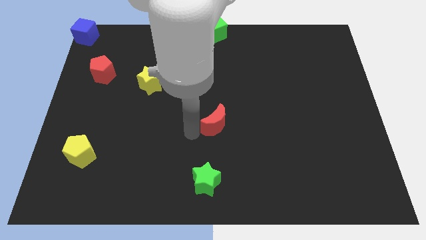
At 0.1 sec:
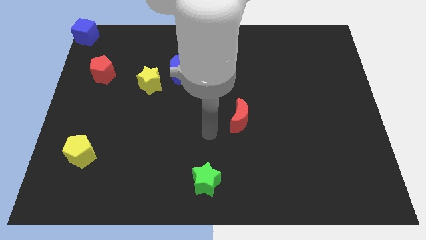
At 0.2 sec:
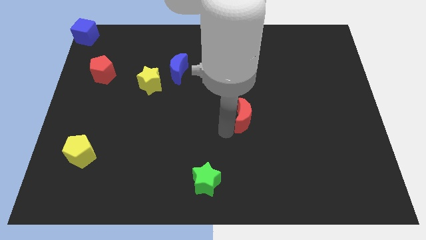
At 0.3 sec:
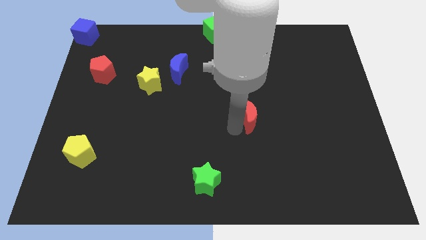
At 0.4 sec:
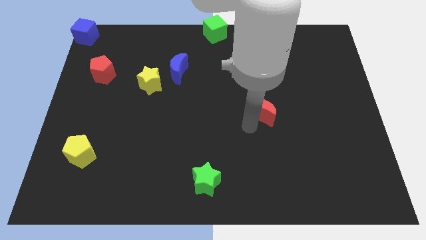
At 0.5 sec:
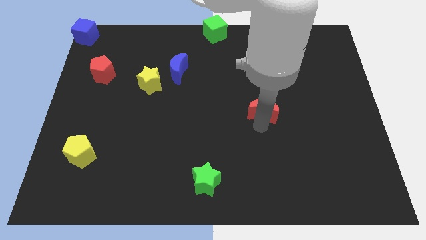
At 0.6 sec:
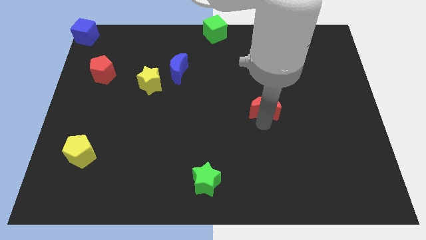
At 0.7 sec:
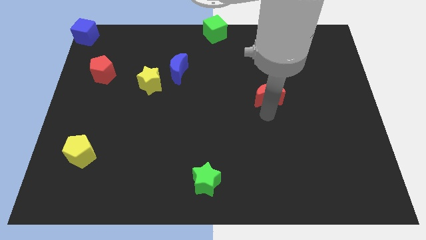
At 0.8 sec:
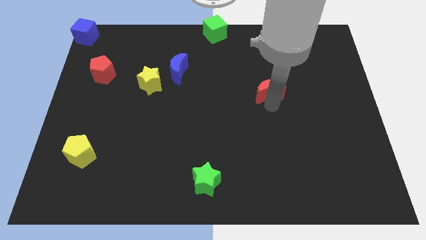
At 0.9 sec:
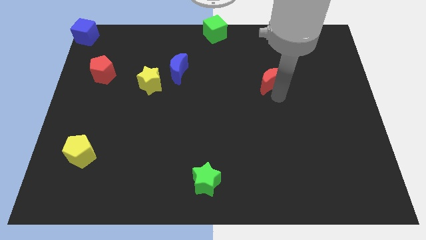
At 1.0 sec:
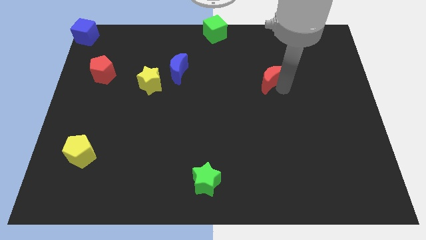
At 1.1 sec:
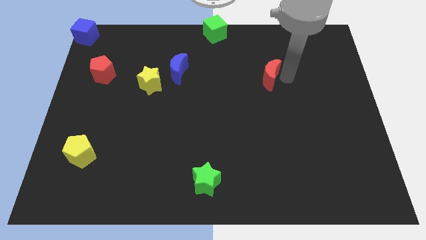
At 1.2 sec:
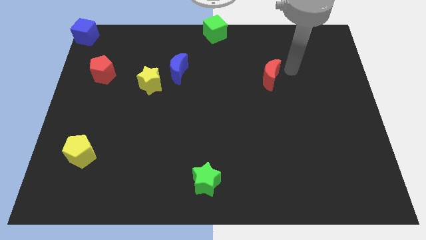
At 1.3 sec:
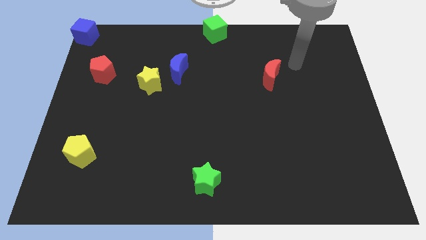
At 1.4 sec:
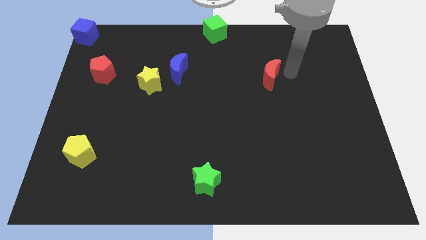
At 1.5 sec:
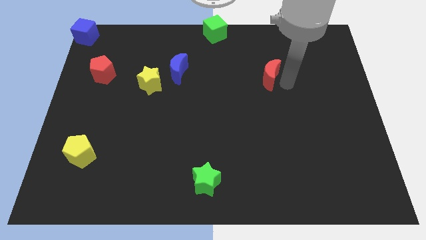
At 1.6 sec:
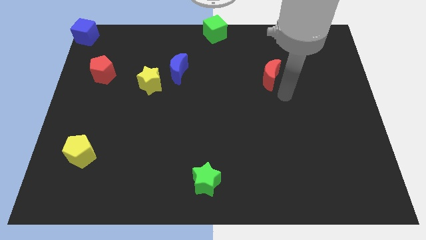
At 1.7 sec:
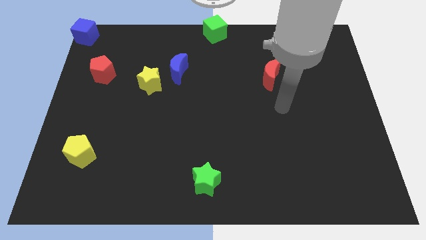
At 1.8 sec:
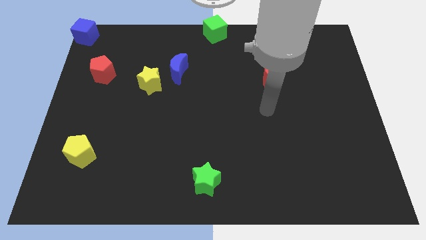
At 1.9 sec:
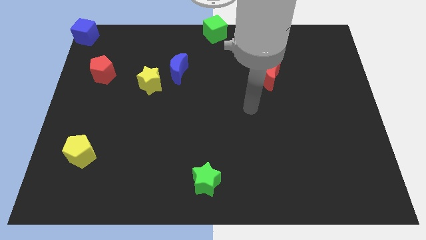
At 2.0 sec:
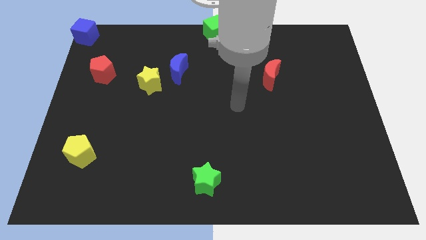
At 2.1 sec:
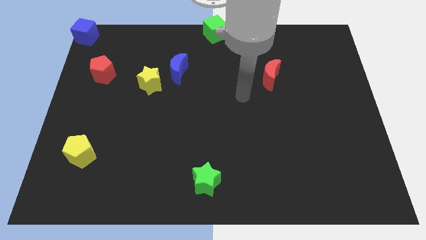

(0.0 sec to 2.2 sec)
place red moon to the right of blue moon

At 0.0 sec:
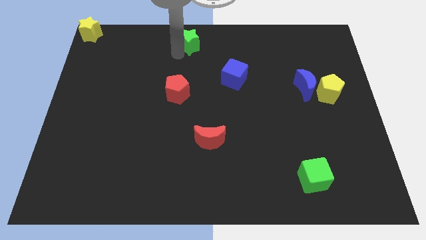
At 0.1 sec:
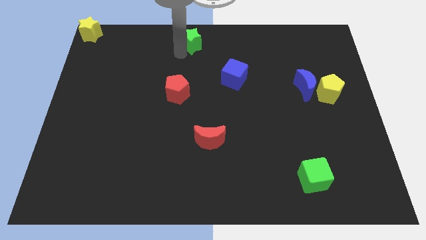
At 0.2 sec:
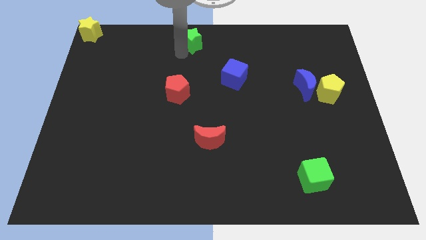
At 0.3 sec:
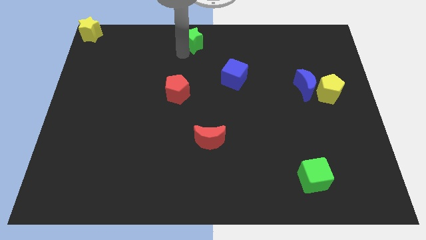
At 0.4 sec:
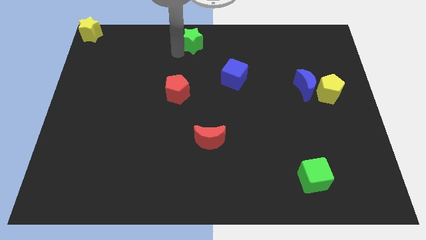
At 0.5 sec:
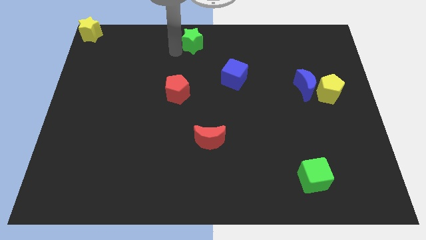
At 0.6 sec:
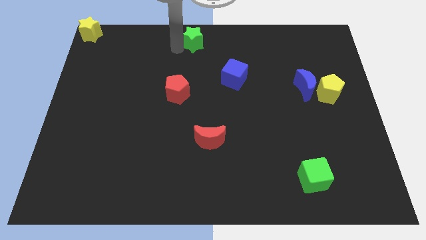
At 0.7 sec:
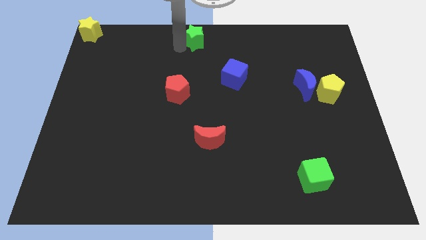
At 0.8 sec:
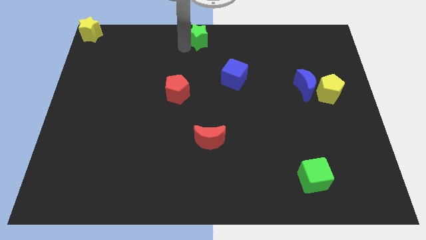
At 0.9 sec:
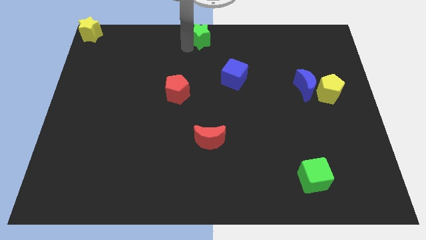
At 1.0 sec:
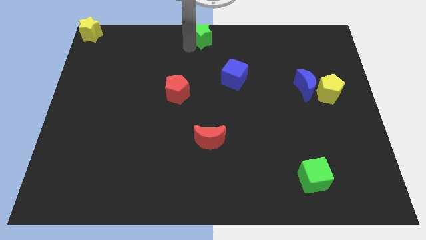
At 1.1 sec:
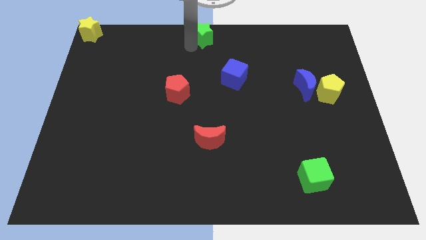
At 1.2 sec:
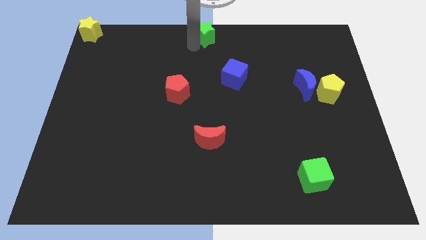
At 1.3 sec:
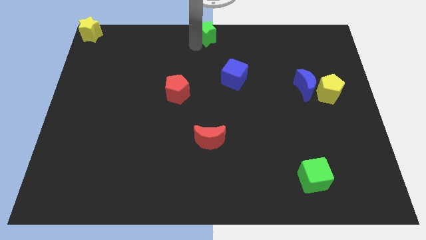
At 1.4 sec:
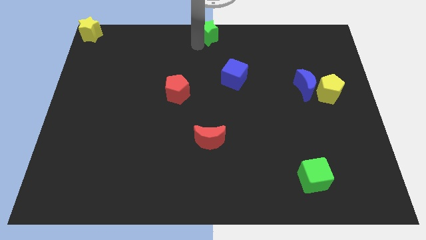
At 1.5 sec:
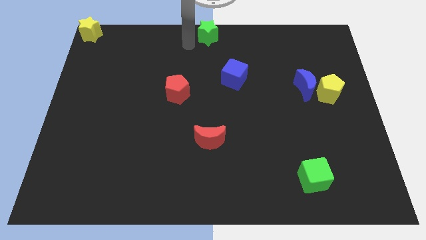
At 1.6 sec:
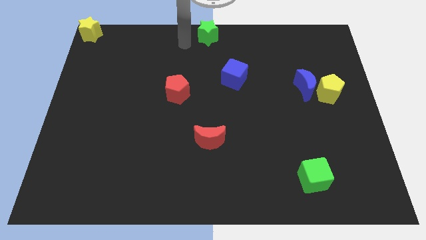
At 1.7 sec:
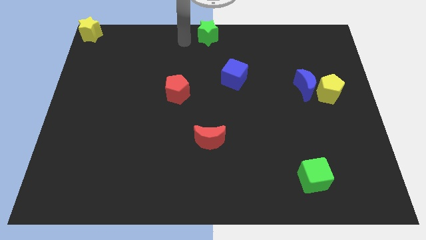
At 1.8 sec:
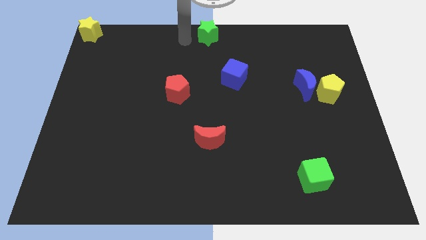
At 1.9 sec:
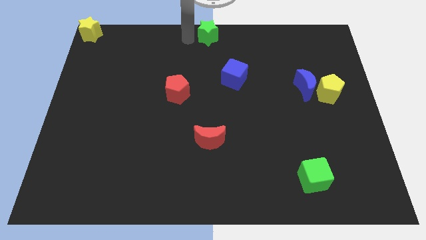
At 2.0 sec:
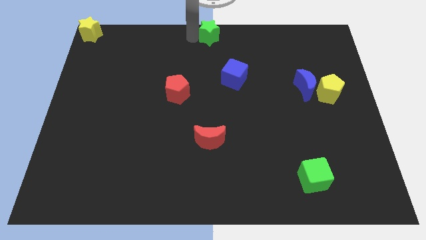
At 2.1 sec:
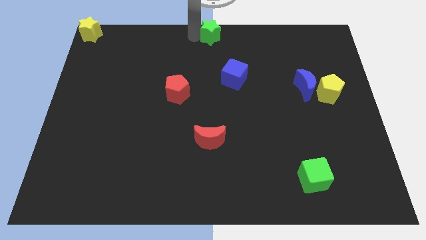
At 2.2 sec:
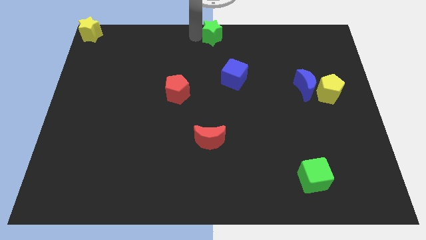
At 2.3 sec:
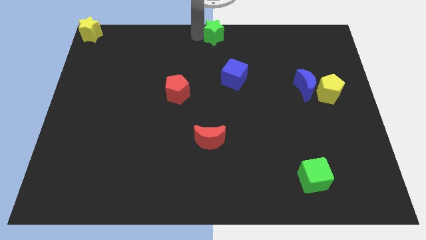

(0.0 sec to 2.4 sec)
push the green star to the top center of the board

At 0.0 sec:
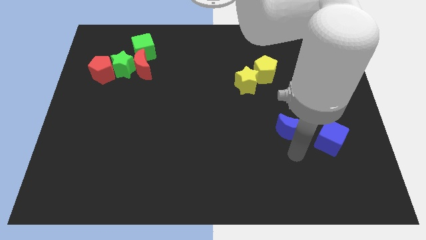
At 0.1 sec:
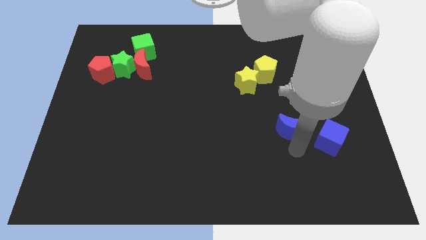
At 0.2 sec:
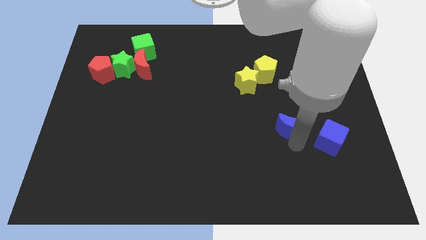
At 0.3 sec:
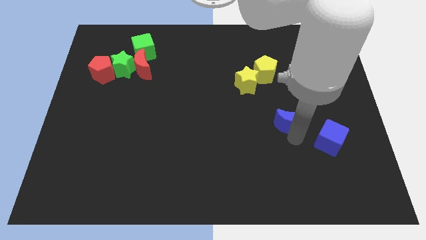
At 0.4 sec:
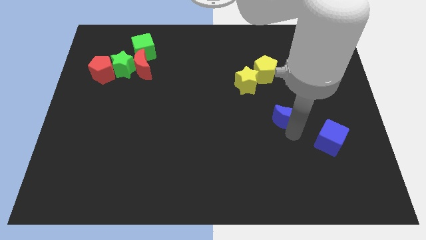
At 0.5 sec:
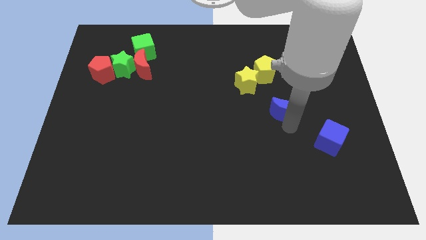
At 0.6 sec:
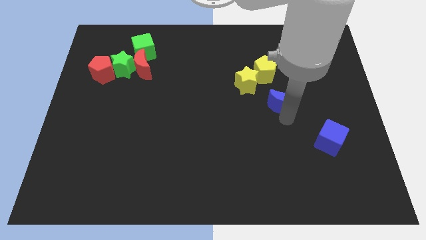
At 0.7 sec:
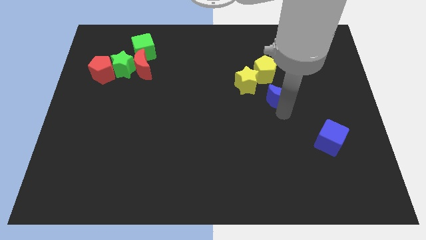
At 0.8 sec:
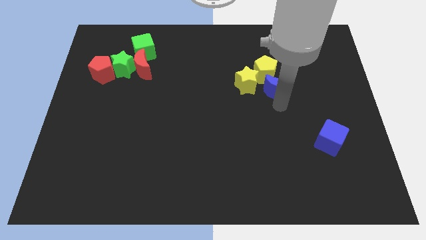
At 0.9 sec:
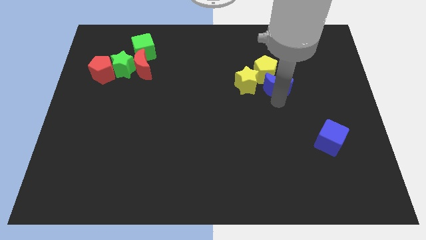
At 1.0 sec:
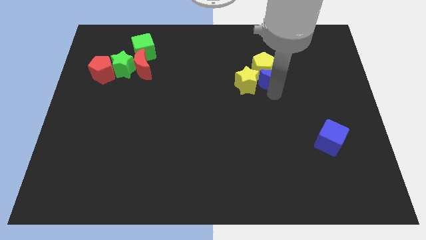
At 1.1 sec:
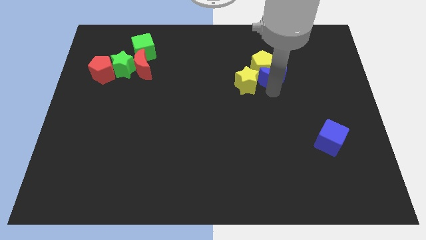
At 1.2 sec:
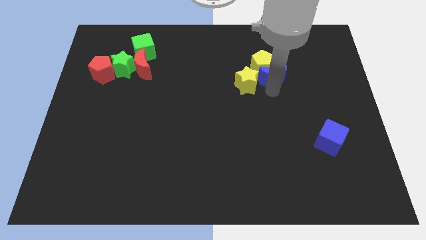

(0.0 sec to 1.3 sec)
put the blue moon at the bottom of the yellow pentagon

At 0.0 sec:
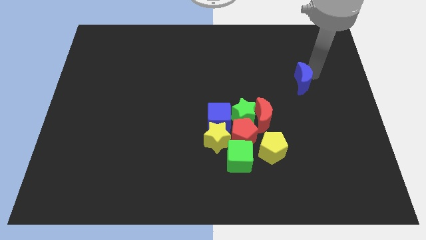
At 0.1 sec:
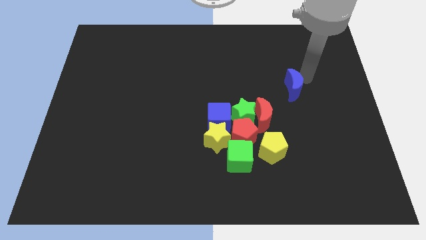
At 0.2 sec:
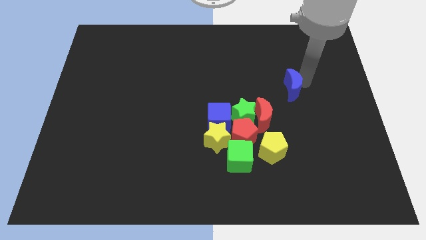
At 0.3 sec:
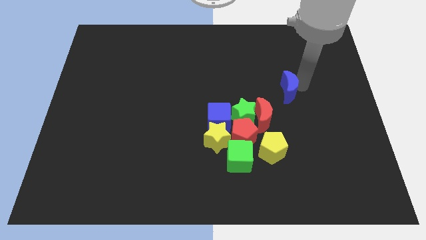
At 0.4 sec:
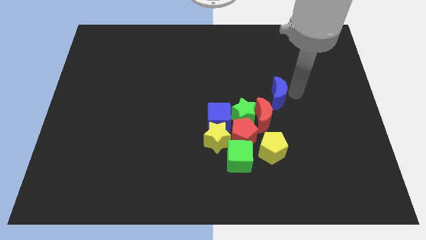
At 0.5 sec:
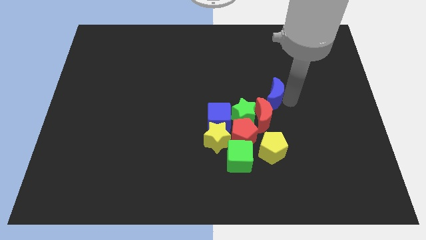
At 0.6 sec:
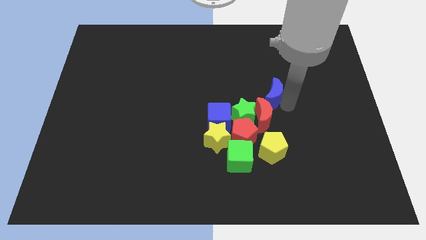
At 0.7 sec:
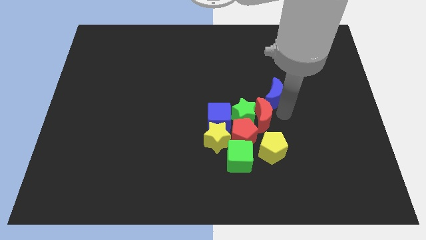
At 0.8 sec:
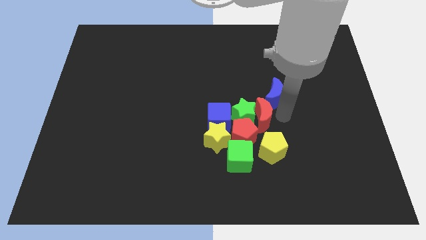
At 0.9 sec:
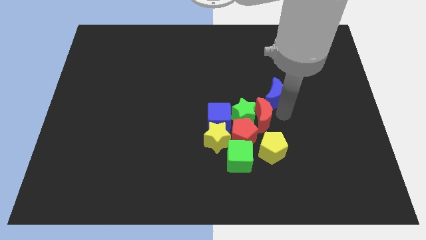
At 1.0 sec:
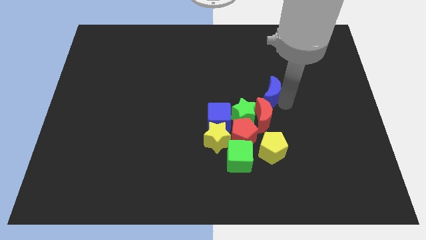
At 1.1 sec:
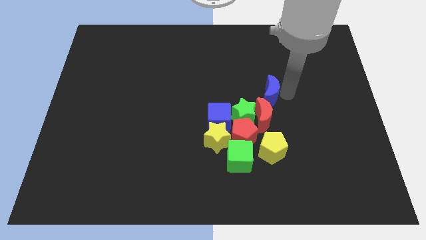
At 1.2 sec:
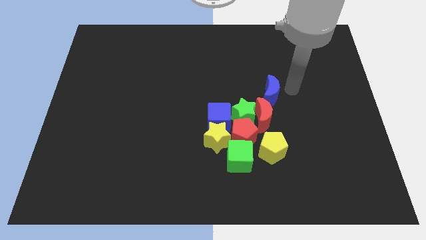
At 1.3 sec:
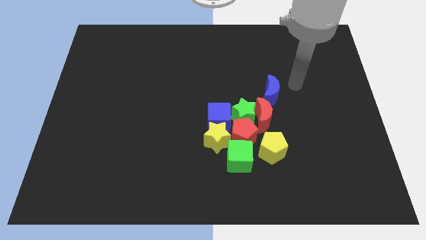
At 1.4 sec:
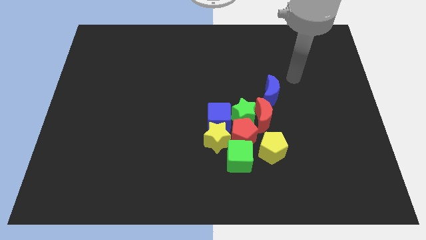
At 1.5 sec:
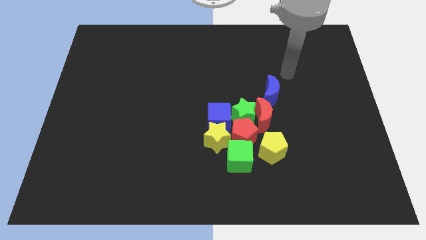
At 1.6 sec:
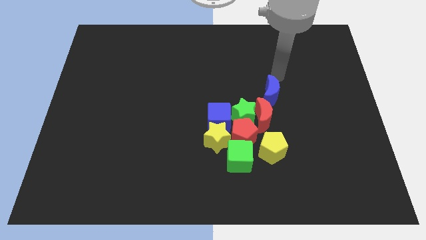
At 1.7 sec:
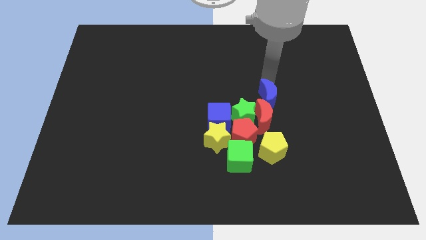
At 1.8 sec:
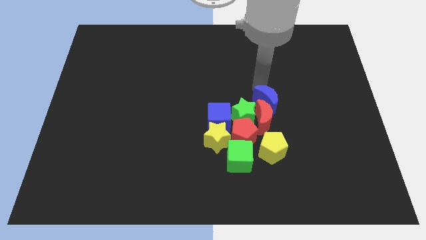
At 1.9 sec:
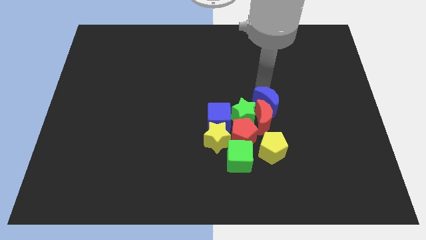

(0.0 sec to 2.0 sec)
push the blue crescent to the right of red crescent

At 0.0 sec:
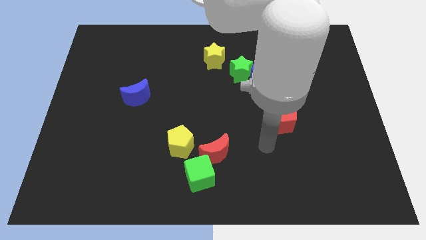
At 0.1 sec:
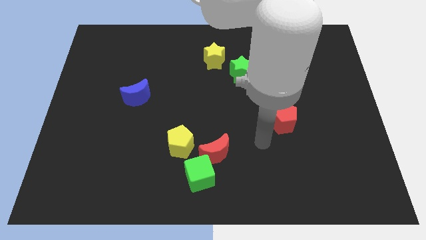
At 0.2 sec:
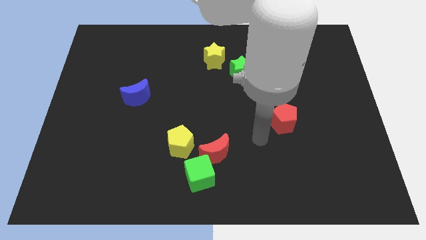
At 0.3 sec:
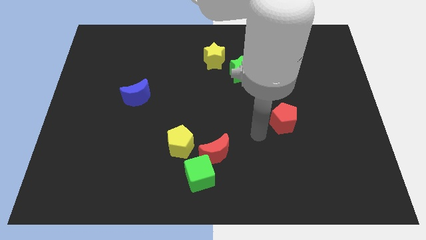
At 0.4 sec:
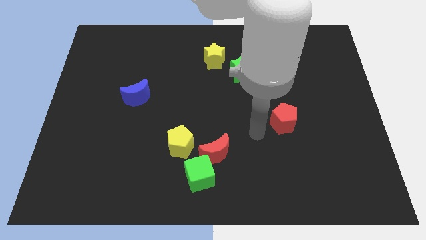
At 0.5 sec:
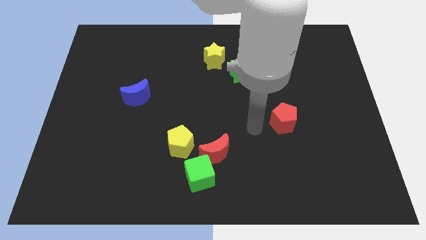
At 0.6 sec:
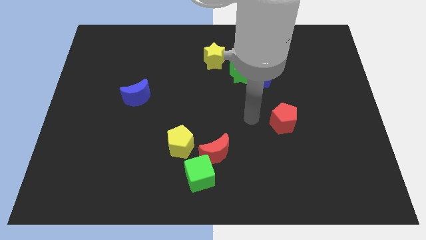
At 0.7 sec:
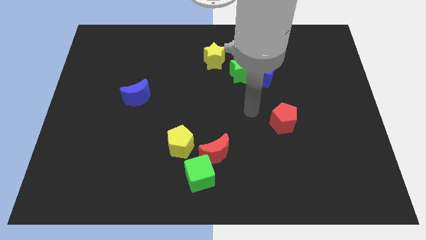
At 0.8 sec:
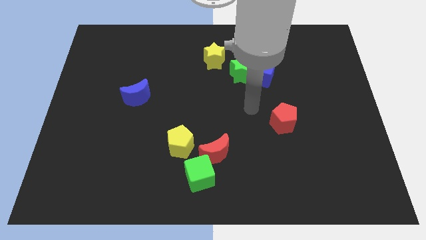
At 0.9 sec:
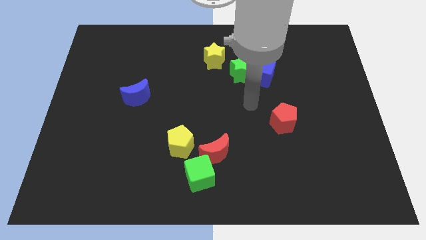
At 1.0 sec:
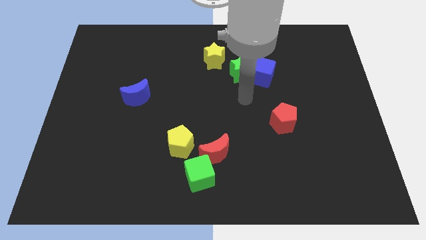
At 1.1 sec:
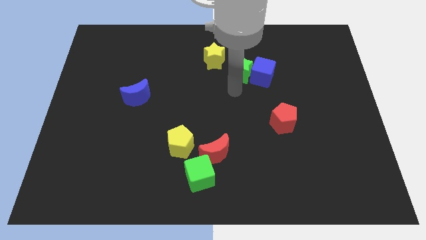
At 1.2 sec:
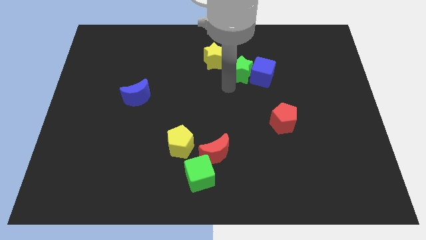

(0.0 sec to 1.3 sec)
place arm at the bottom of green star
